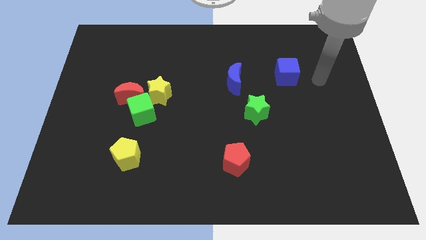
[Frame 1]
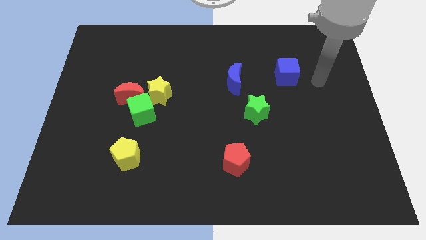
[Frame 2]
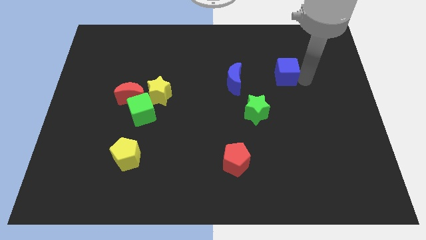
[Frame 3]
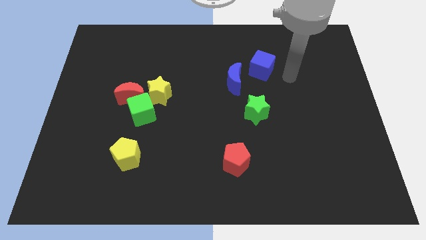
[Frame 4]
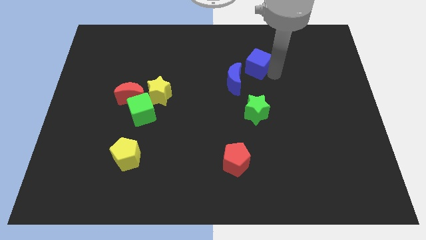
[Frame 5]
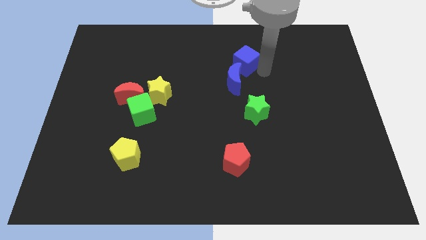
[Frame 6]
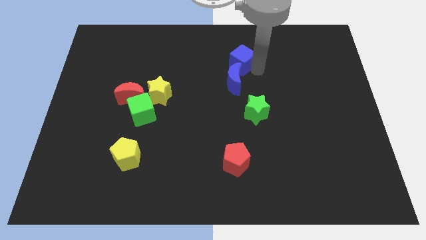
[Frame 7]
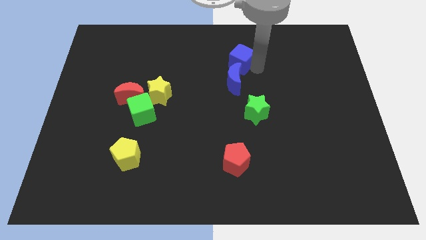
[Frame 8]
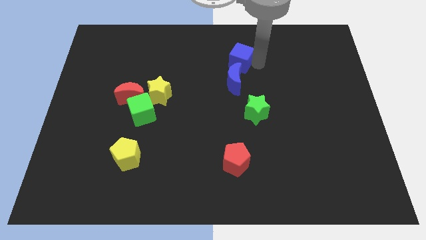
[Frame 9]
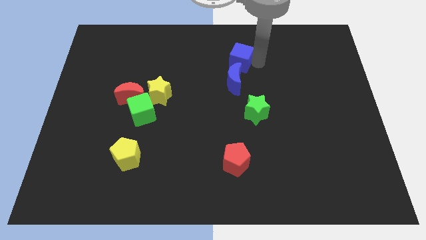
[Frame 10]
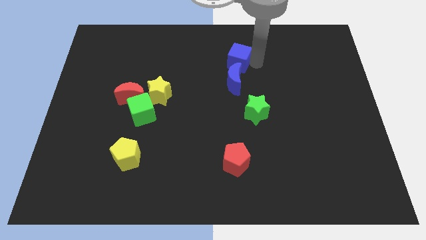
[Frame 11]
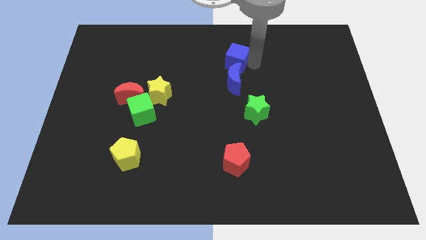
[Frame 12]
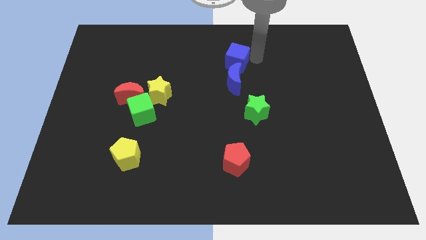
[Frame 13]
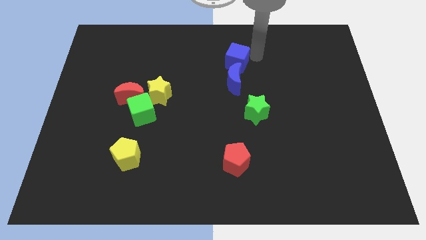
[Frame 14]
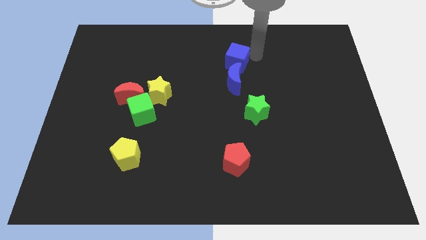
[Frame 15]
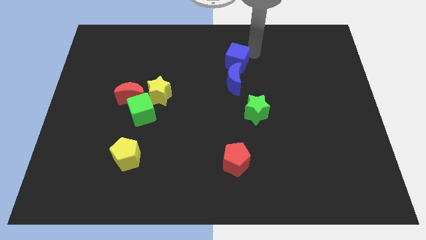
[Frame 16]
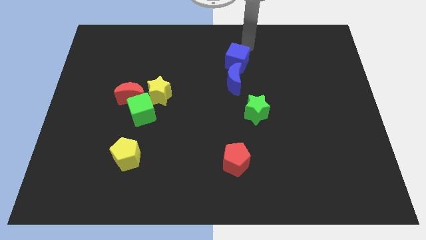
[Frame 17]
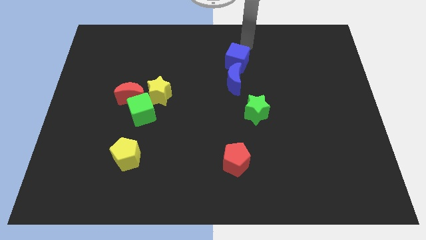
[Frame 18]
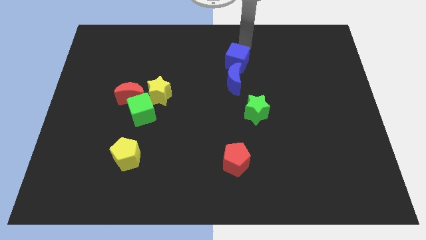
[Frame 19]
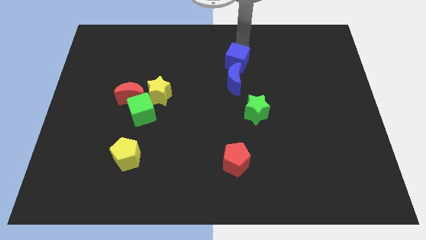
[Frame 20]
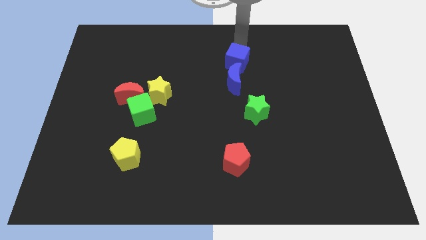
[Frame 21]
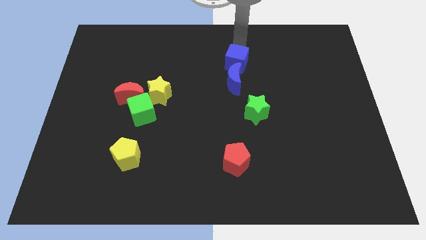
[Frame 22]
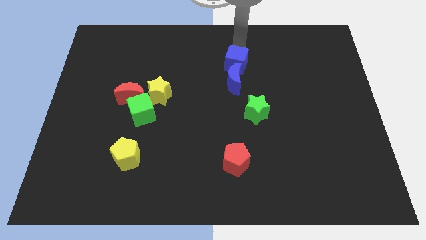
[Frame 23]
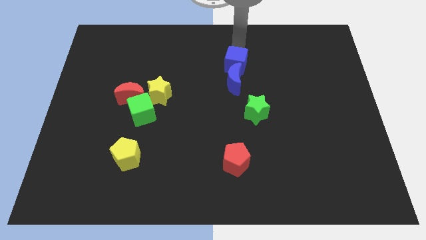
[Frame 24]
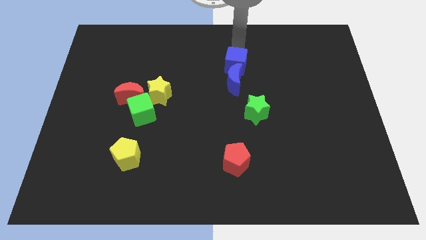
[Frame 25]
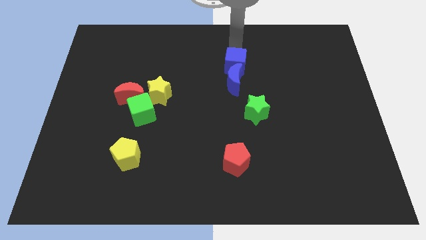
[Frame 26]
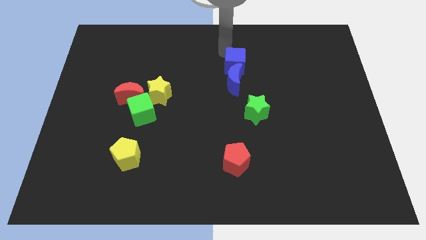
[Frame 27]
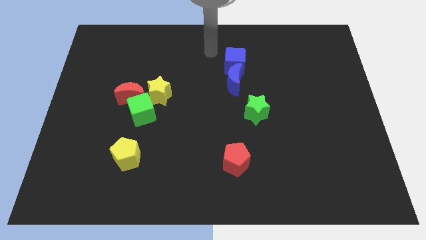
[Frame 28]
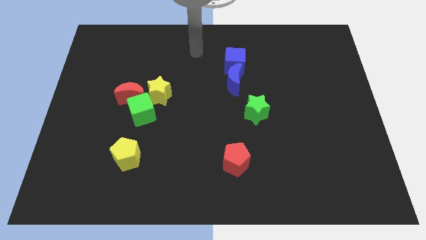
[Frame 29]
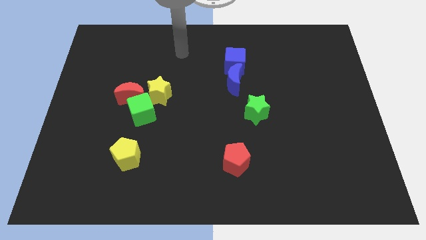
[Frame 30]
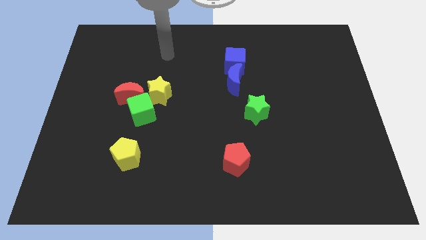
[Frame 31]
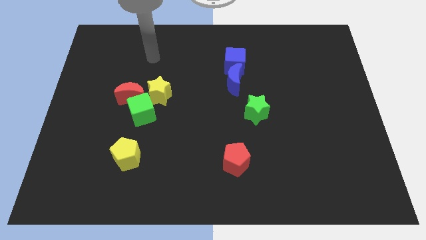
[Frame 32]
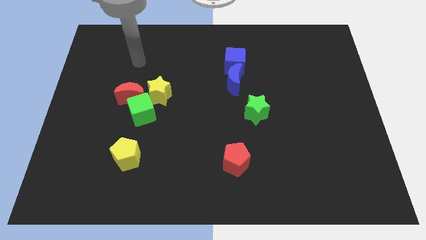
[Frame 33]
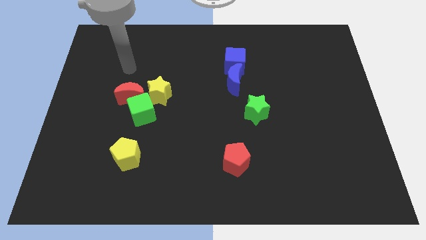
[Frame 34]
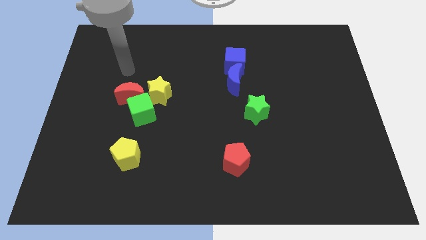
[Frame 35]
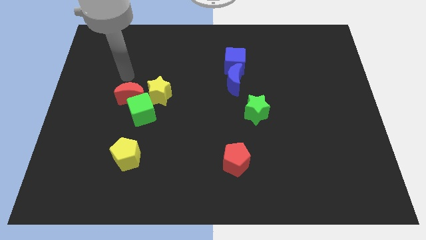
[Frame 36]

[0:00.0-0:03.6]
move the blue cube to the top side of the blue crescent

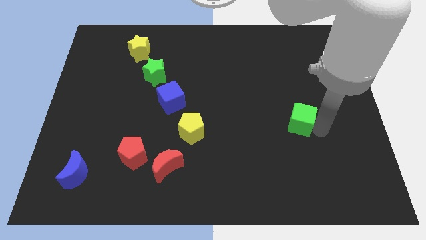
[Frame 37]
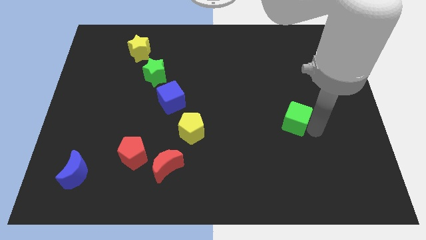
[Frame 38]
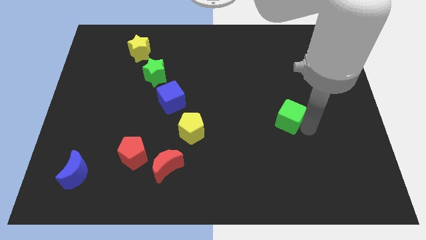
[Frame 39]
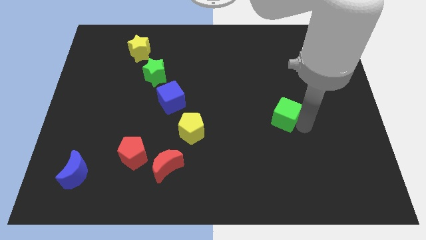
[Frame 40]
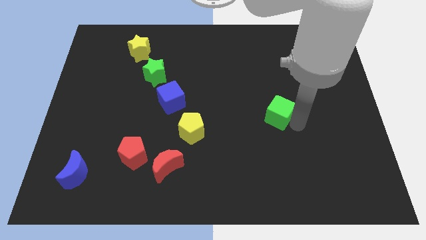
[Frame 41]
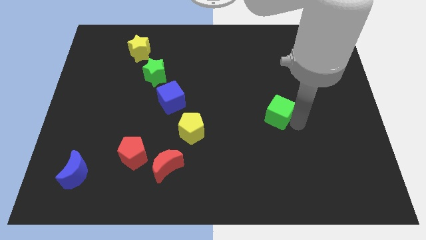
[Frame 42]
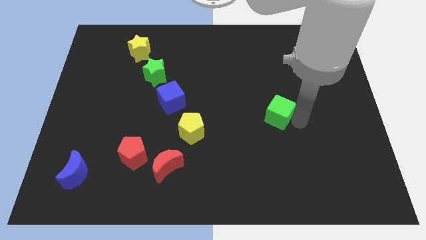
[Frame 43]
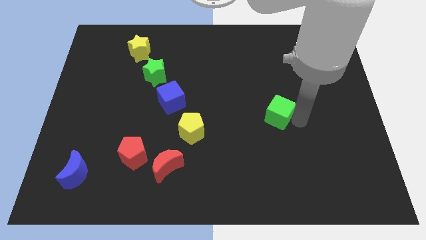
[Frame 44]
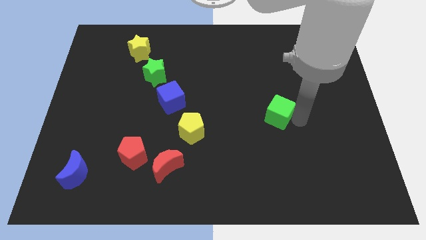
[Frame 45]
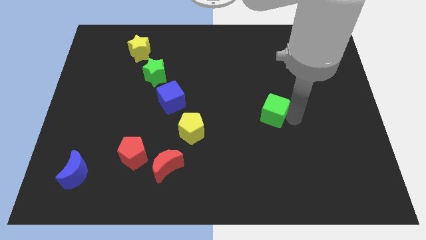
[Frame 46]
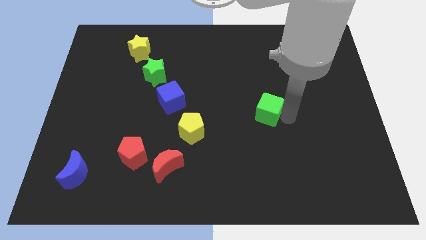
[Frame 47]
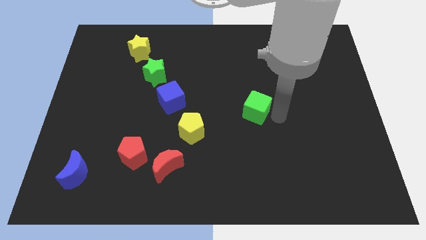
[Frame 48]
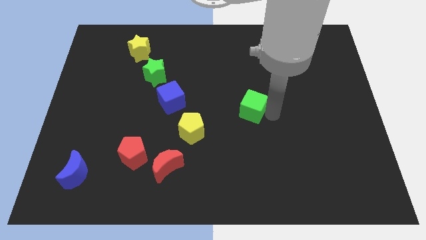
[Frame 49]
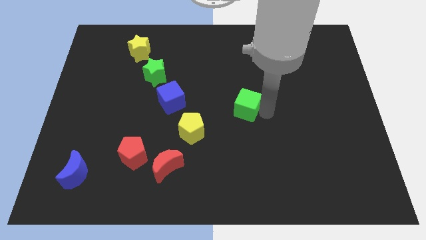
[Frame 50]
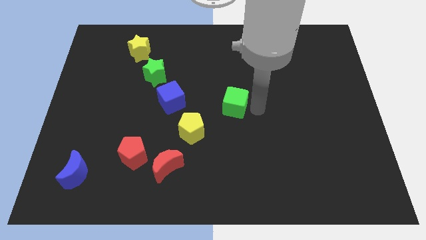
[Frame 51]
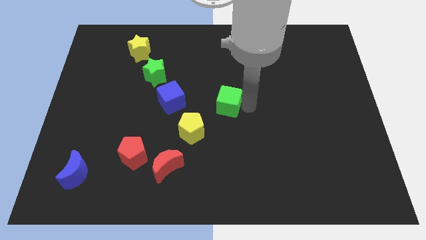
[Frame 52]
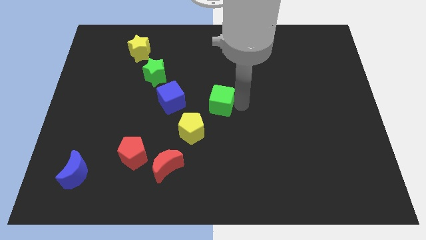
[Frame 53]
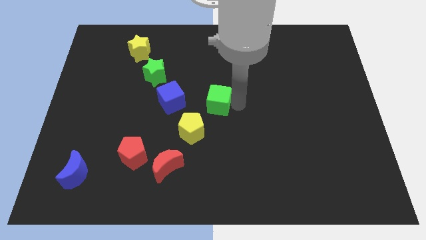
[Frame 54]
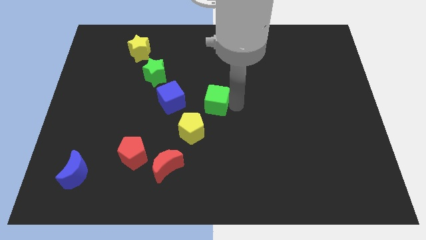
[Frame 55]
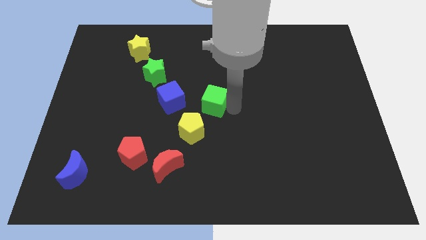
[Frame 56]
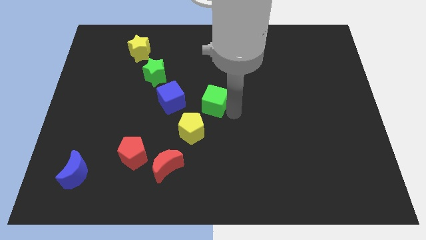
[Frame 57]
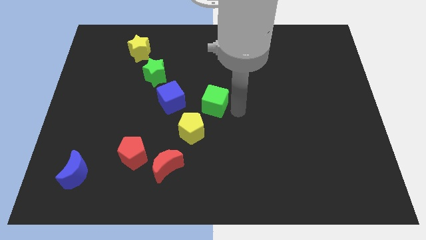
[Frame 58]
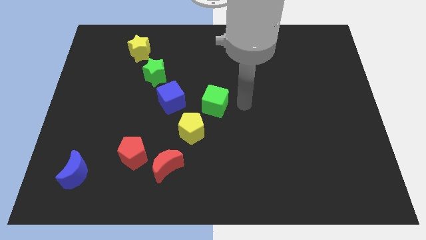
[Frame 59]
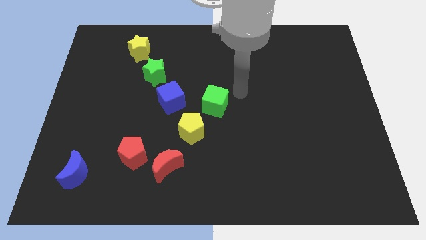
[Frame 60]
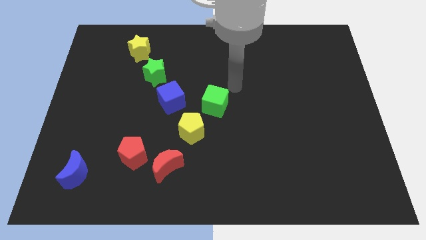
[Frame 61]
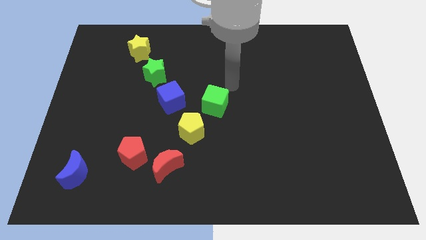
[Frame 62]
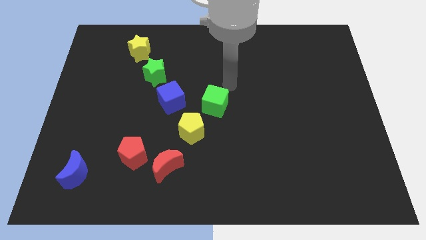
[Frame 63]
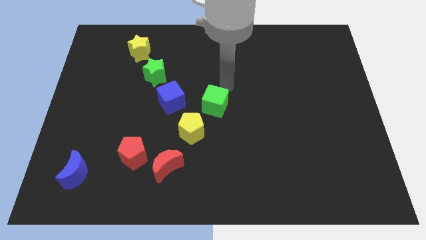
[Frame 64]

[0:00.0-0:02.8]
move the green cube to the top right of the yellow pentagon

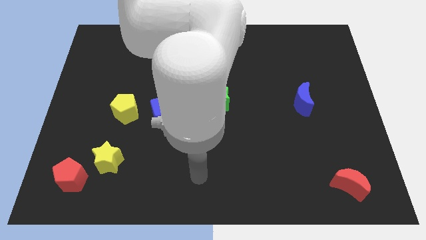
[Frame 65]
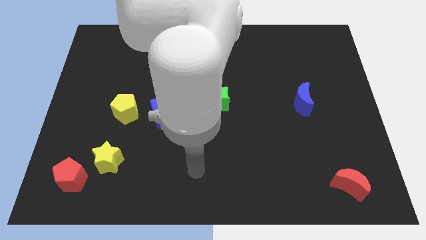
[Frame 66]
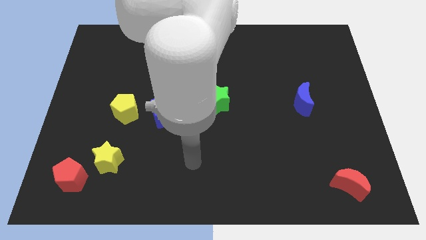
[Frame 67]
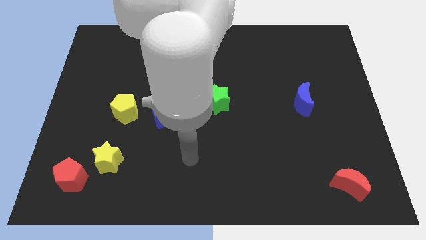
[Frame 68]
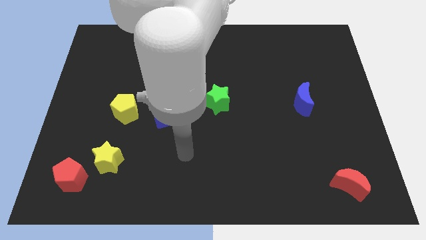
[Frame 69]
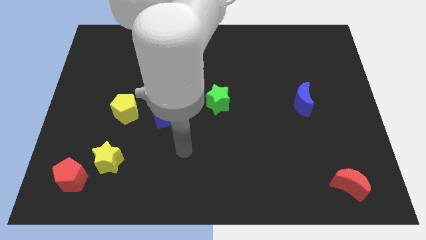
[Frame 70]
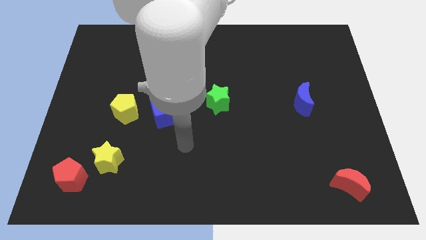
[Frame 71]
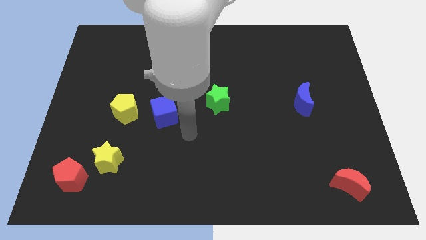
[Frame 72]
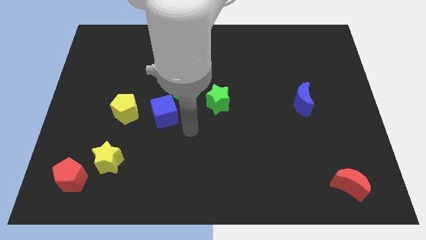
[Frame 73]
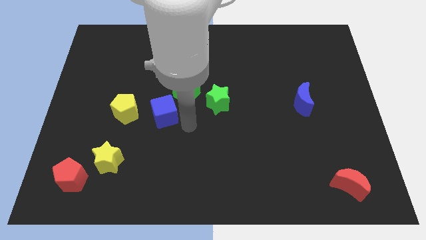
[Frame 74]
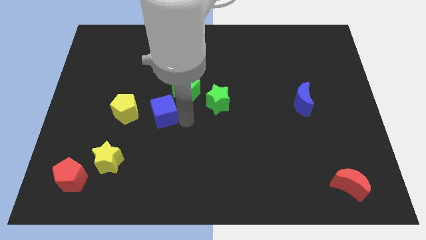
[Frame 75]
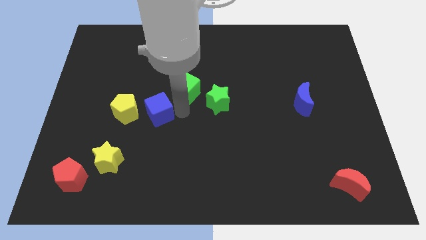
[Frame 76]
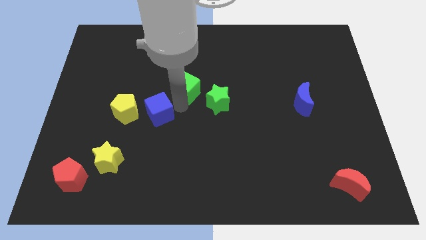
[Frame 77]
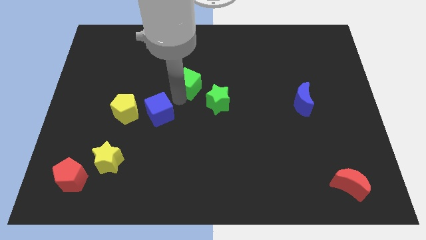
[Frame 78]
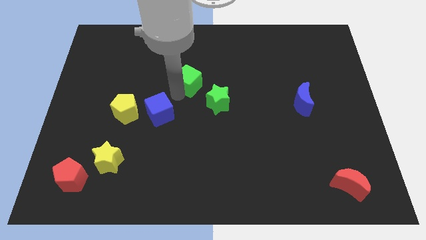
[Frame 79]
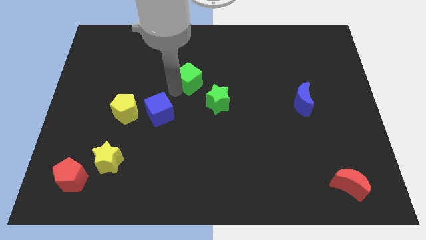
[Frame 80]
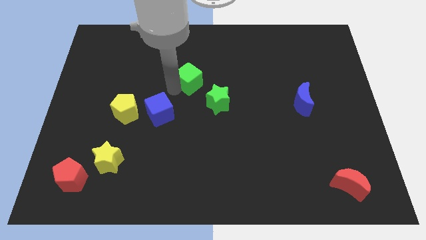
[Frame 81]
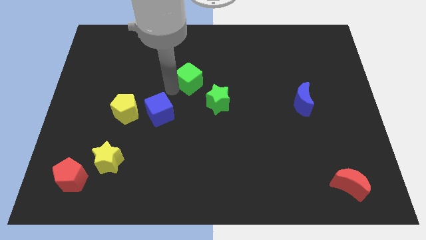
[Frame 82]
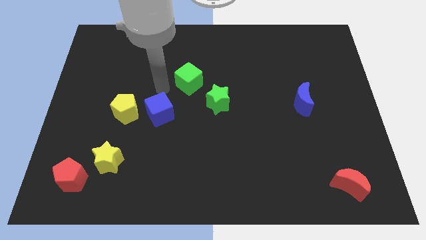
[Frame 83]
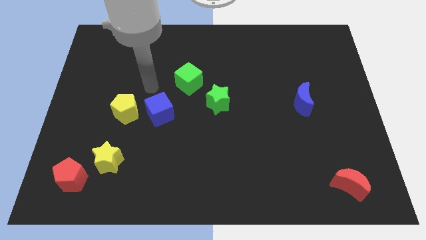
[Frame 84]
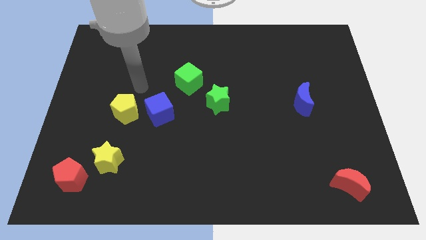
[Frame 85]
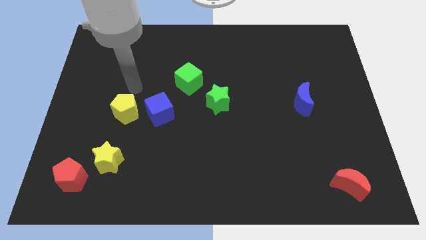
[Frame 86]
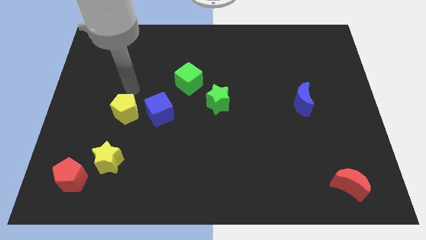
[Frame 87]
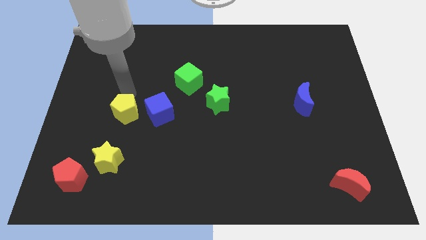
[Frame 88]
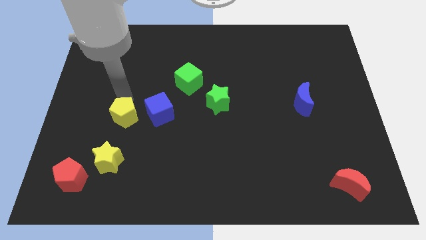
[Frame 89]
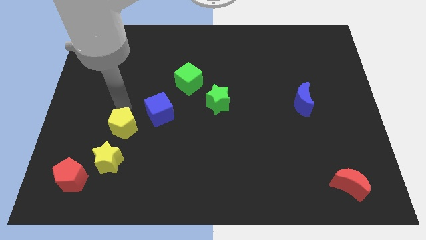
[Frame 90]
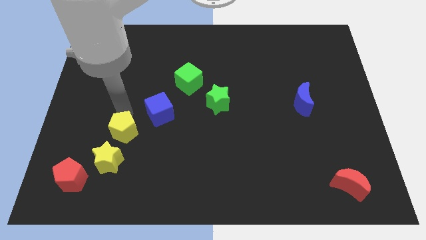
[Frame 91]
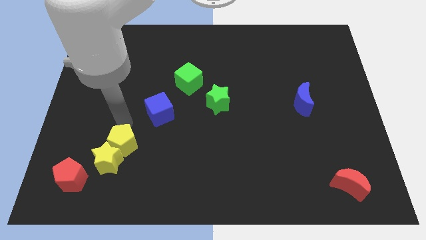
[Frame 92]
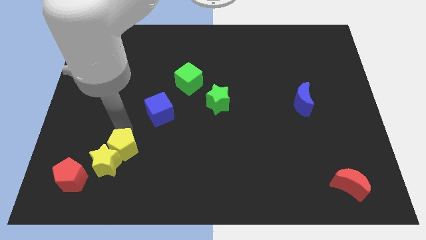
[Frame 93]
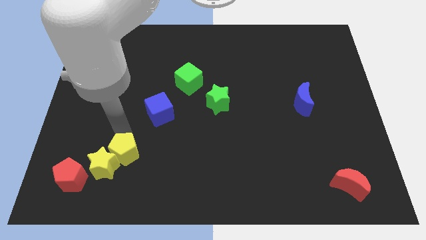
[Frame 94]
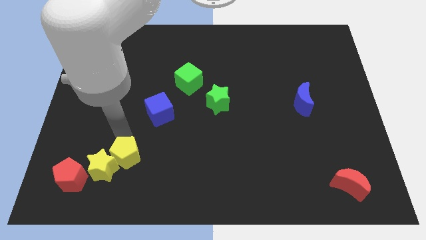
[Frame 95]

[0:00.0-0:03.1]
slide the yellow pentagon into the top right side of the yellow star
